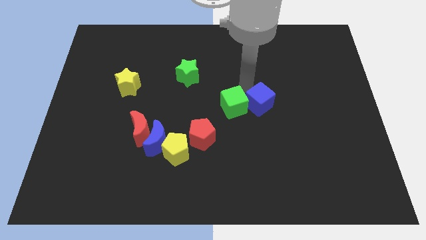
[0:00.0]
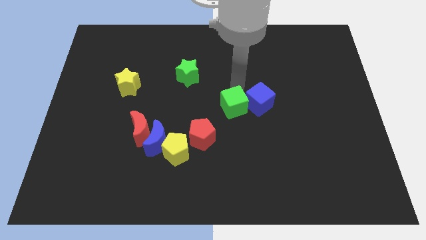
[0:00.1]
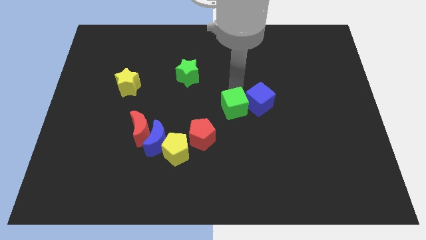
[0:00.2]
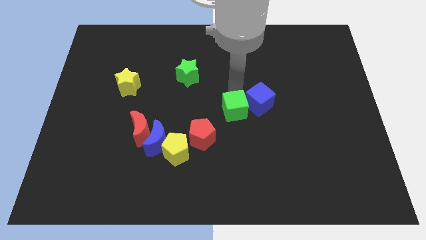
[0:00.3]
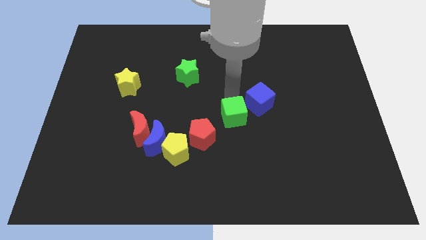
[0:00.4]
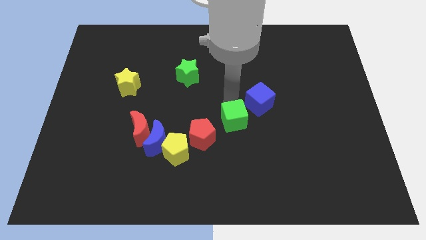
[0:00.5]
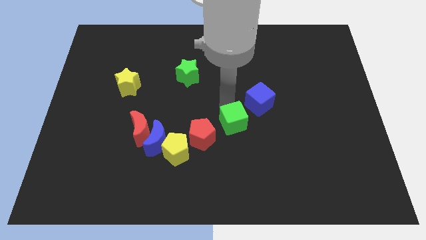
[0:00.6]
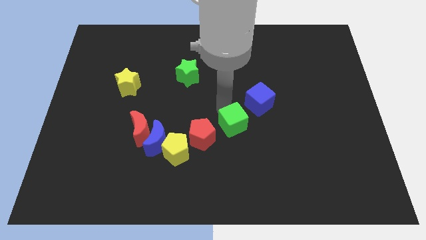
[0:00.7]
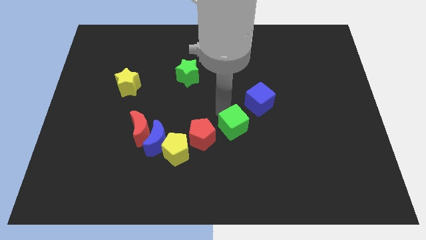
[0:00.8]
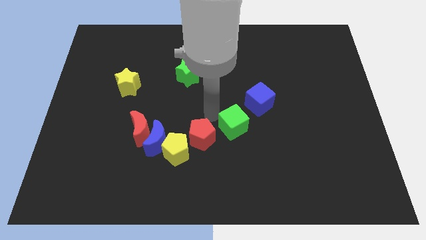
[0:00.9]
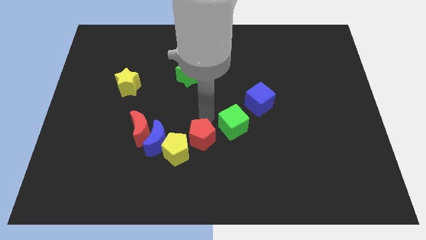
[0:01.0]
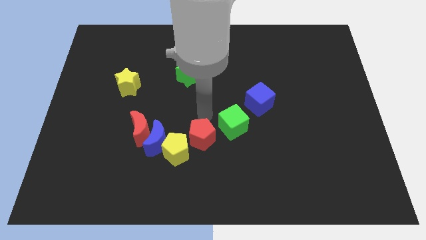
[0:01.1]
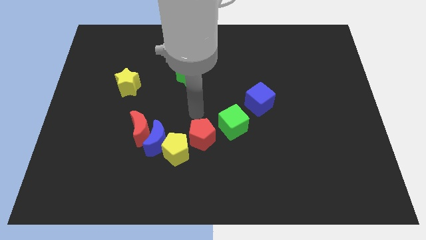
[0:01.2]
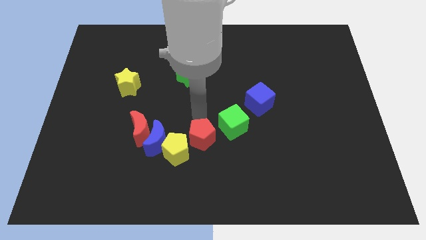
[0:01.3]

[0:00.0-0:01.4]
place green cube to the right of red pentagon

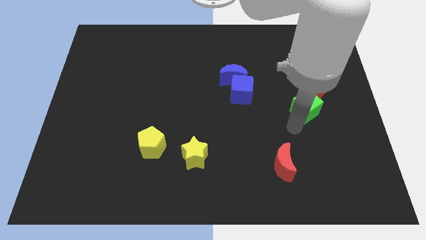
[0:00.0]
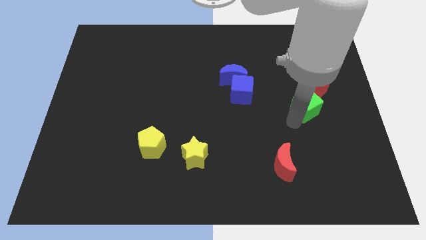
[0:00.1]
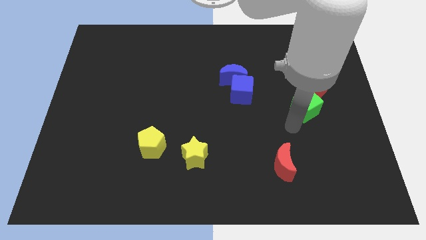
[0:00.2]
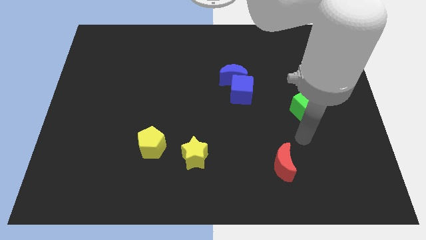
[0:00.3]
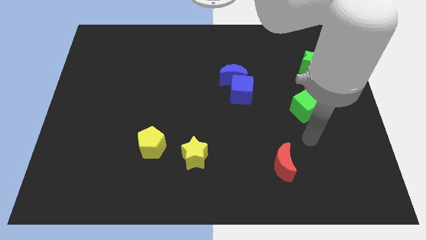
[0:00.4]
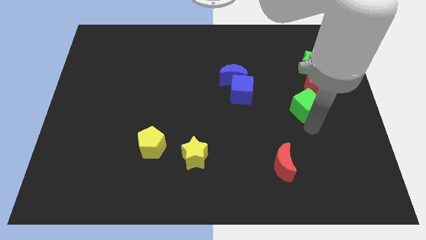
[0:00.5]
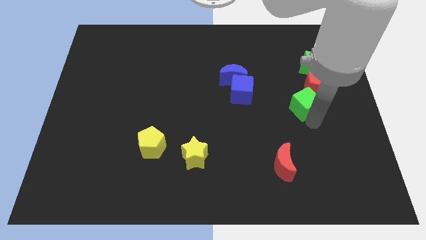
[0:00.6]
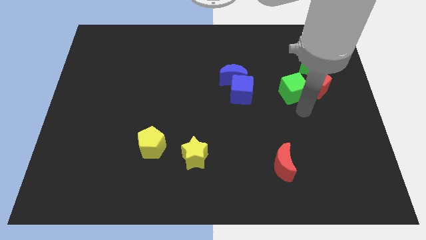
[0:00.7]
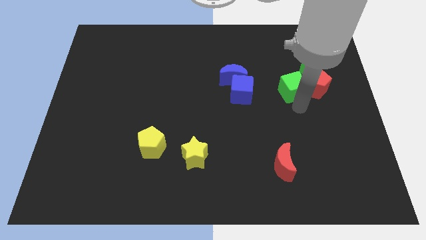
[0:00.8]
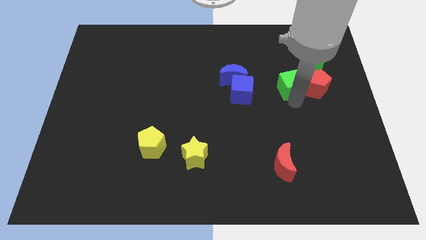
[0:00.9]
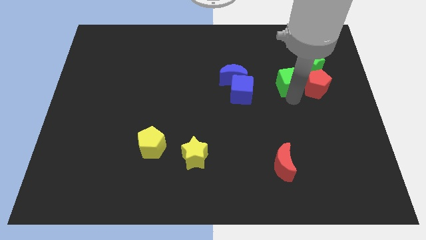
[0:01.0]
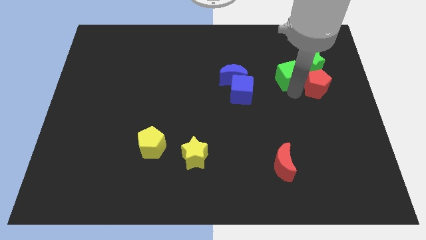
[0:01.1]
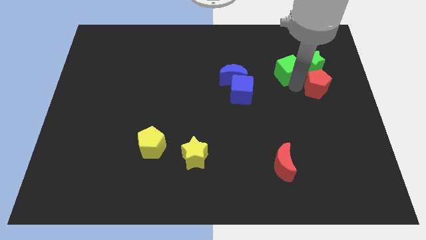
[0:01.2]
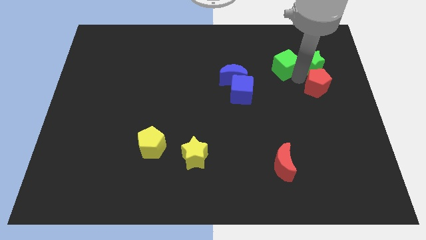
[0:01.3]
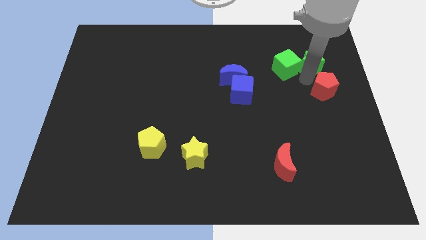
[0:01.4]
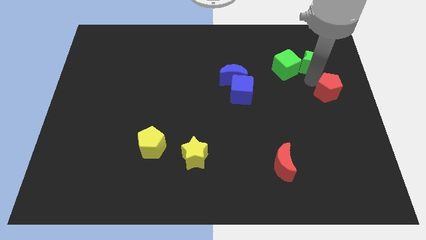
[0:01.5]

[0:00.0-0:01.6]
put the green cube left to the green star

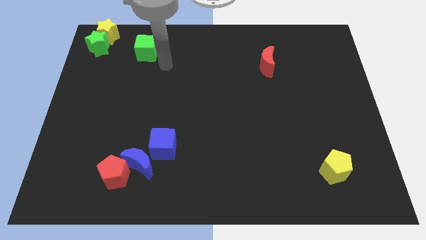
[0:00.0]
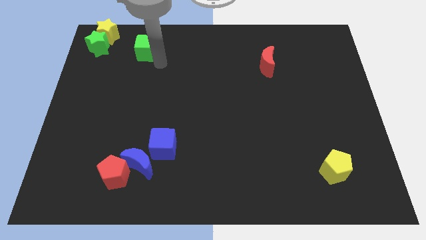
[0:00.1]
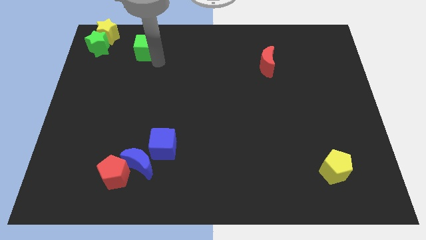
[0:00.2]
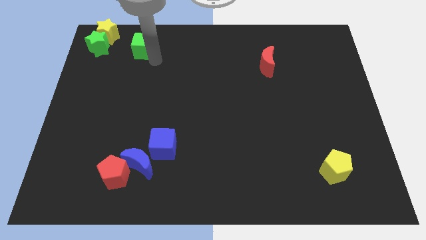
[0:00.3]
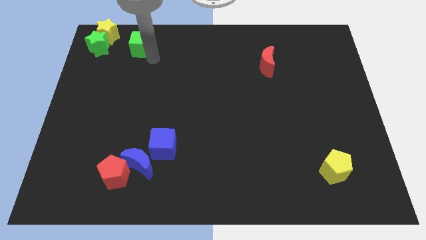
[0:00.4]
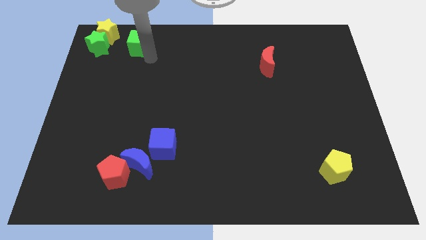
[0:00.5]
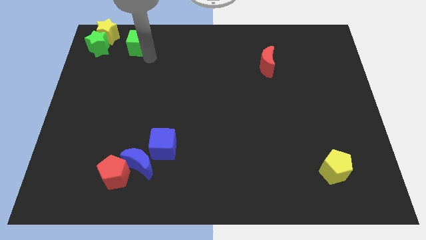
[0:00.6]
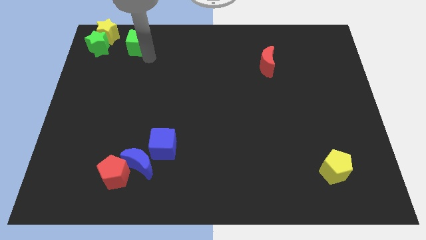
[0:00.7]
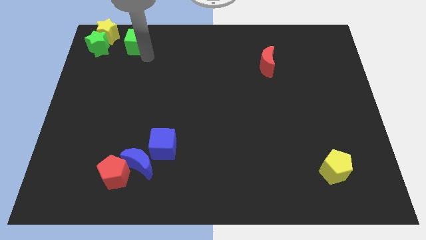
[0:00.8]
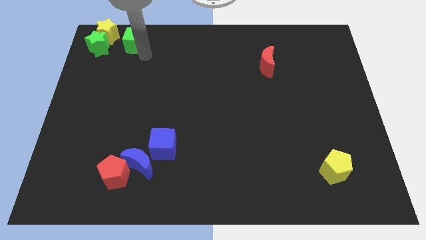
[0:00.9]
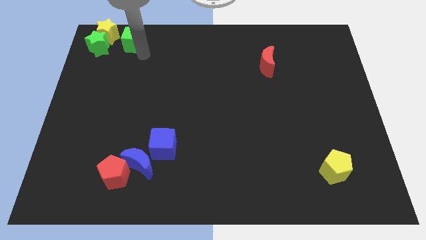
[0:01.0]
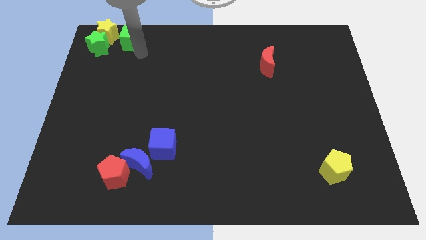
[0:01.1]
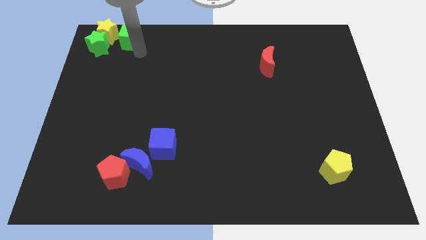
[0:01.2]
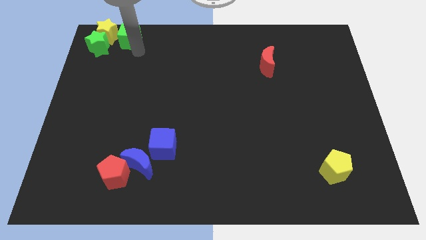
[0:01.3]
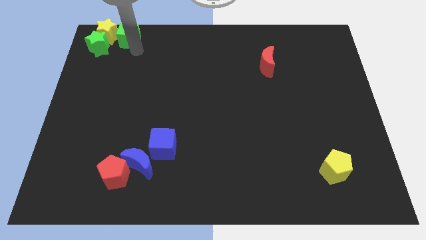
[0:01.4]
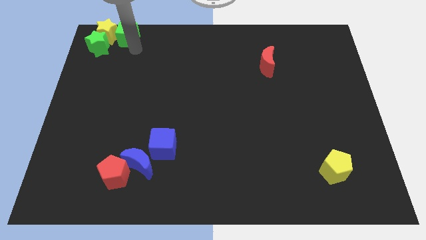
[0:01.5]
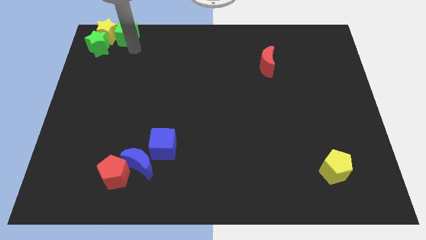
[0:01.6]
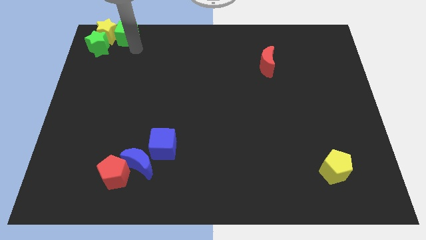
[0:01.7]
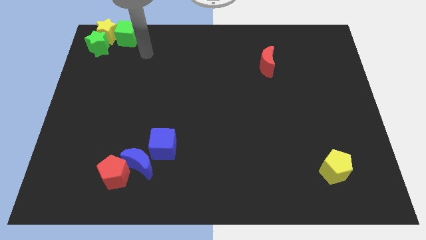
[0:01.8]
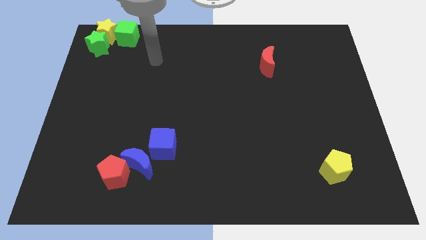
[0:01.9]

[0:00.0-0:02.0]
place the green cube to the right side of the yellow star

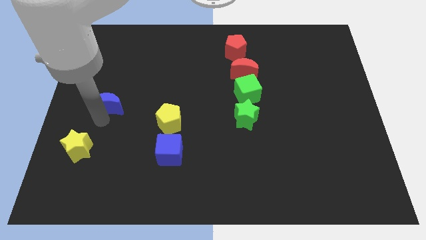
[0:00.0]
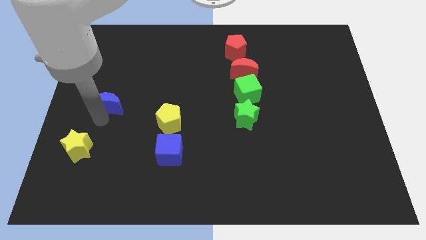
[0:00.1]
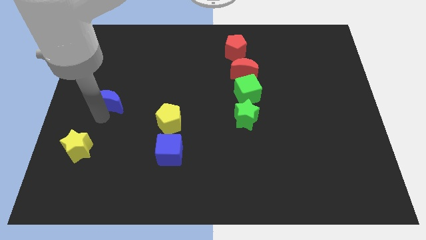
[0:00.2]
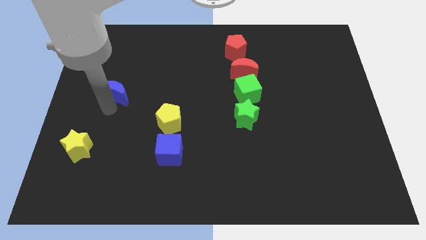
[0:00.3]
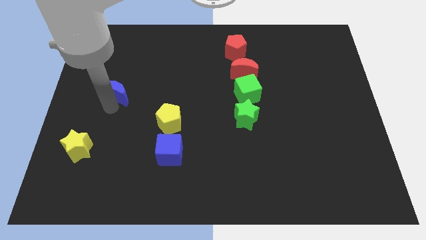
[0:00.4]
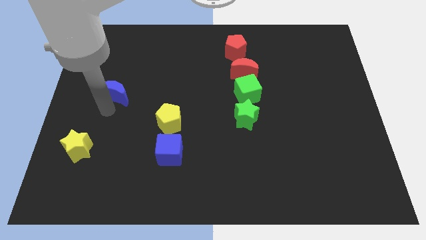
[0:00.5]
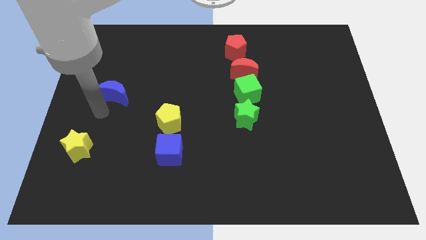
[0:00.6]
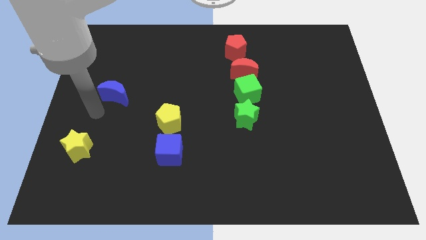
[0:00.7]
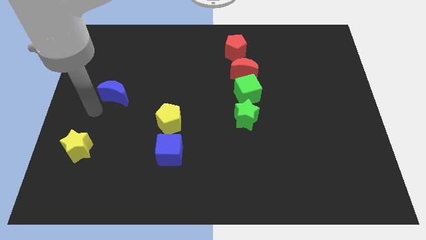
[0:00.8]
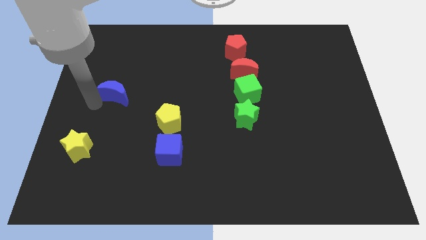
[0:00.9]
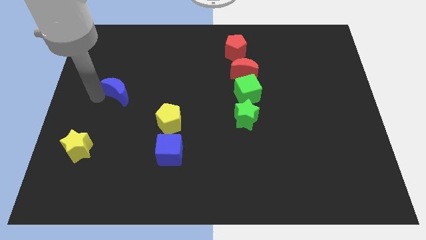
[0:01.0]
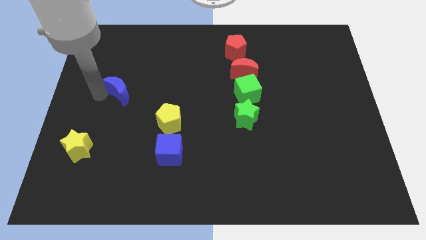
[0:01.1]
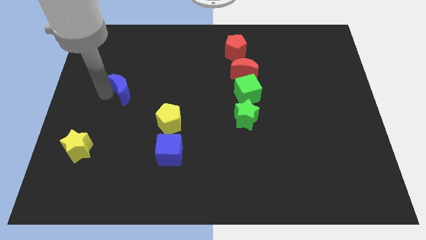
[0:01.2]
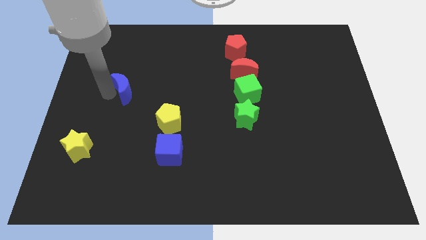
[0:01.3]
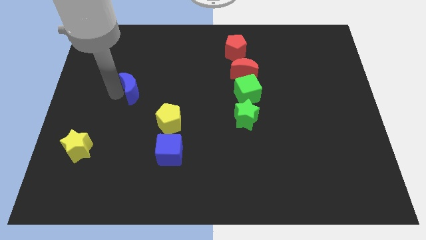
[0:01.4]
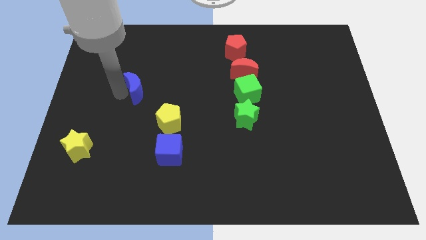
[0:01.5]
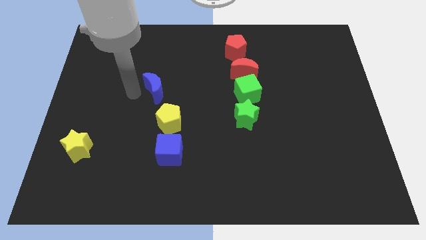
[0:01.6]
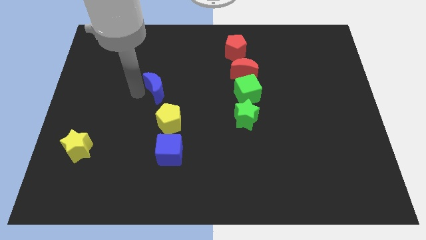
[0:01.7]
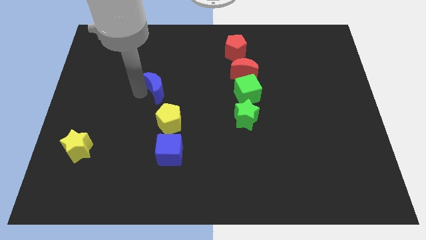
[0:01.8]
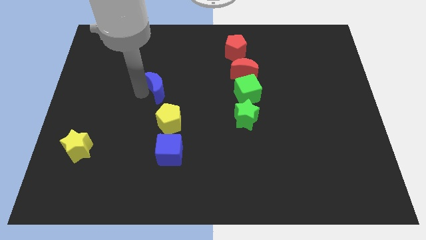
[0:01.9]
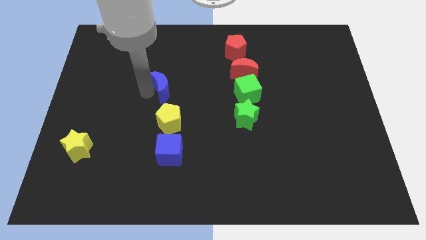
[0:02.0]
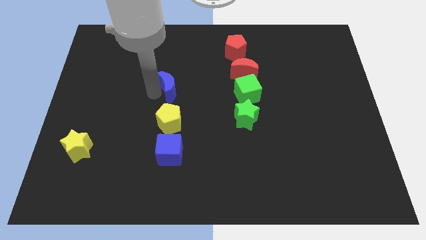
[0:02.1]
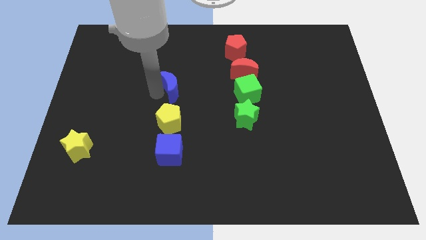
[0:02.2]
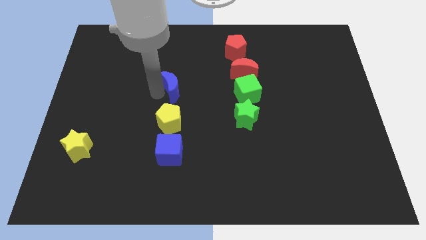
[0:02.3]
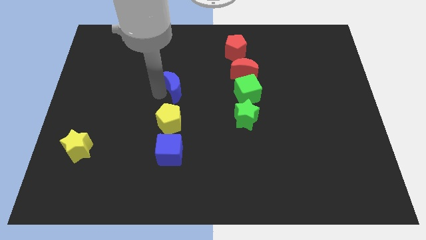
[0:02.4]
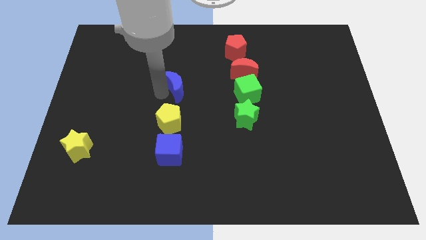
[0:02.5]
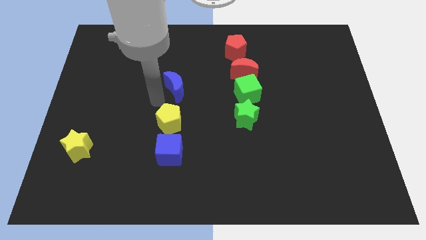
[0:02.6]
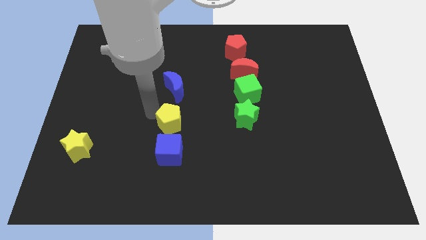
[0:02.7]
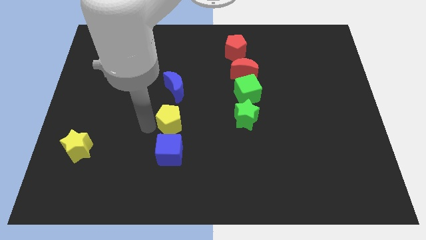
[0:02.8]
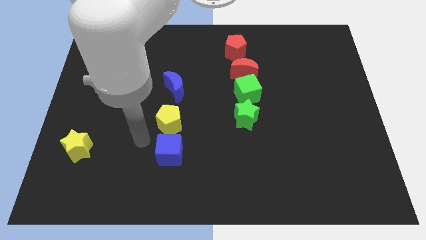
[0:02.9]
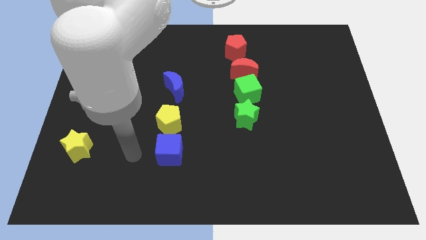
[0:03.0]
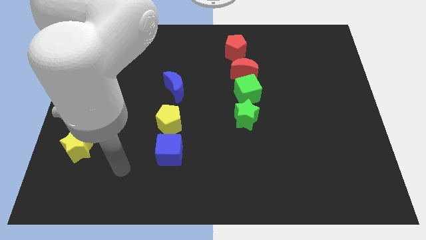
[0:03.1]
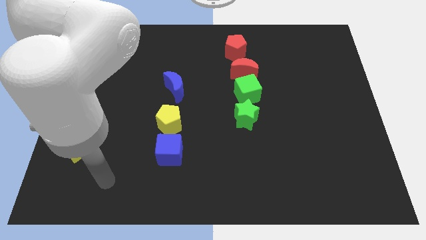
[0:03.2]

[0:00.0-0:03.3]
move the blue moon above the yellow pentagon

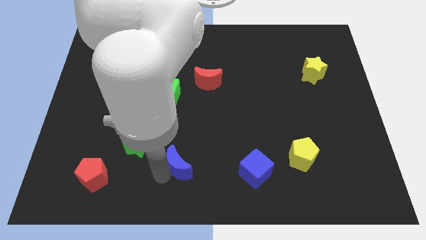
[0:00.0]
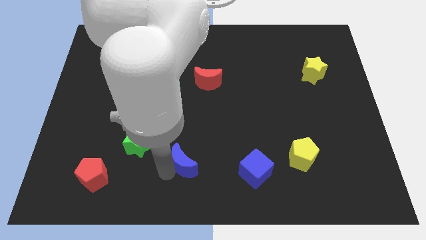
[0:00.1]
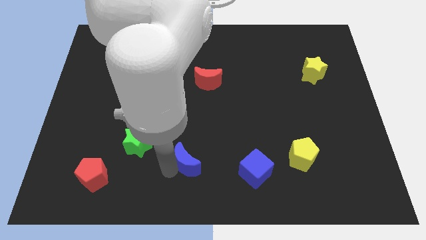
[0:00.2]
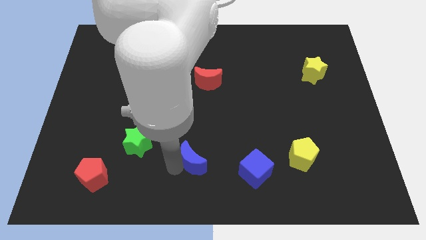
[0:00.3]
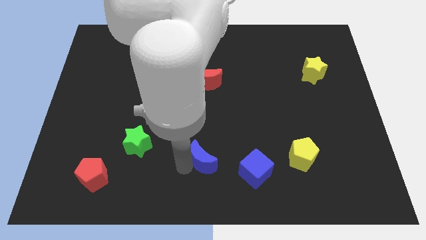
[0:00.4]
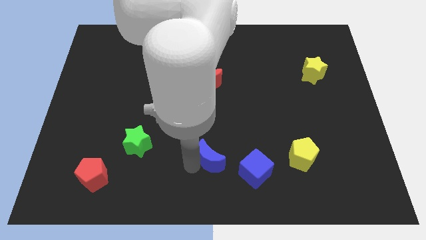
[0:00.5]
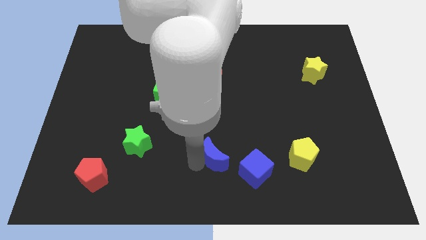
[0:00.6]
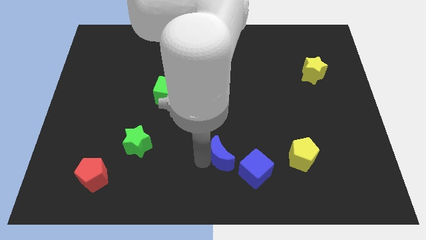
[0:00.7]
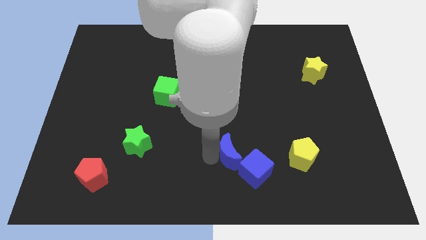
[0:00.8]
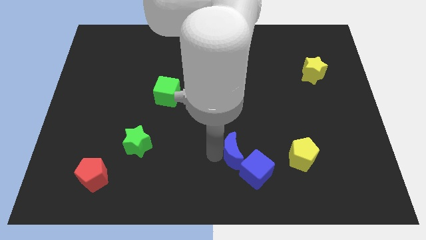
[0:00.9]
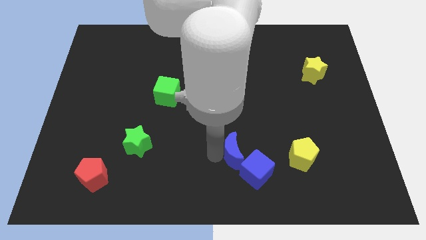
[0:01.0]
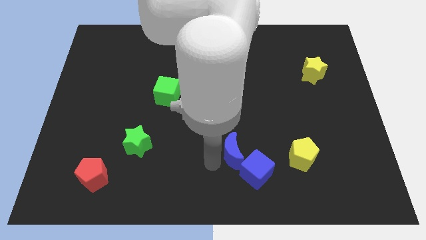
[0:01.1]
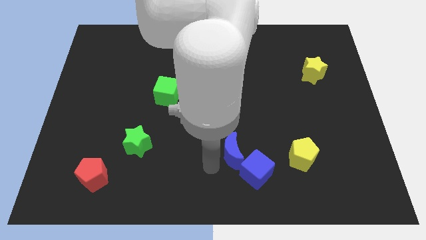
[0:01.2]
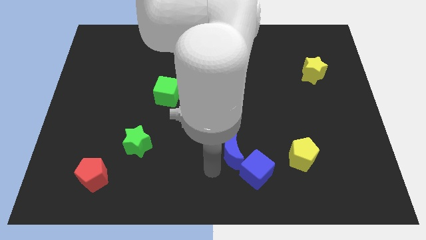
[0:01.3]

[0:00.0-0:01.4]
place blue moon to the top of blue cube
